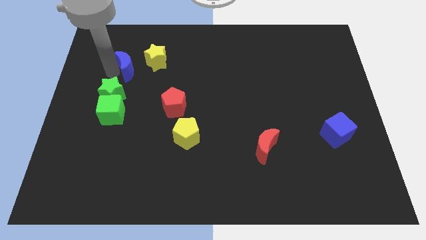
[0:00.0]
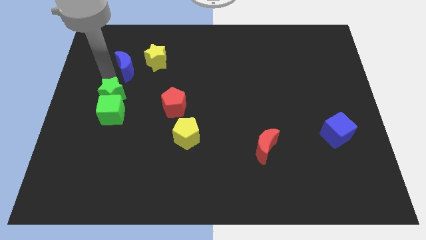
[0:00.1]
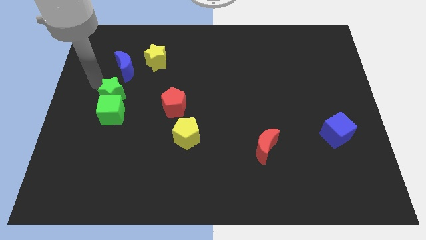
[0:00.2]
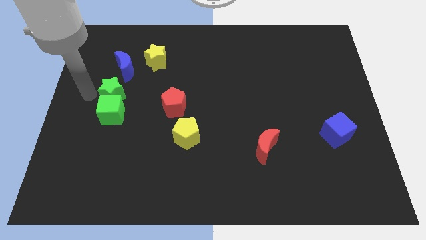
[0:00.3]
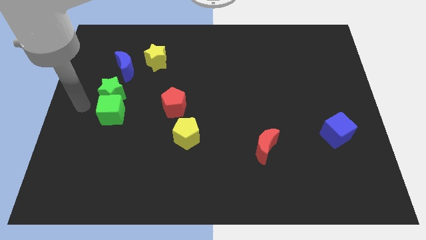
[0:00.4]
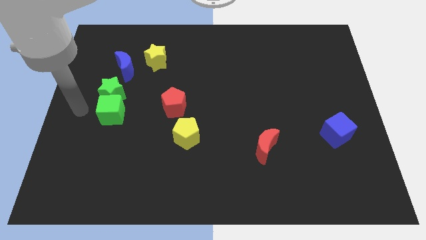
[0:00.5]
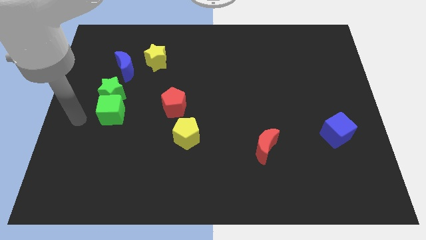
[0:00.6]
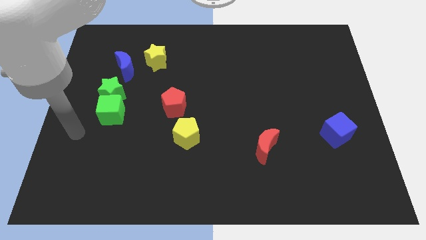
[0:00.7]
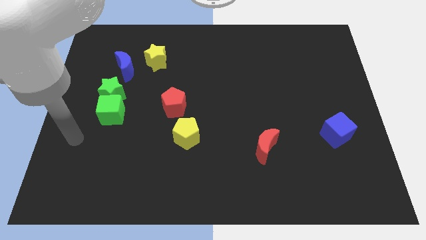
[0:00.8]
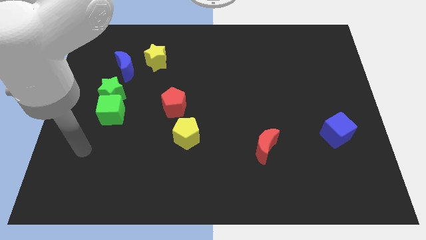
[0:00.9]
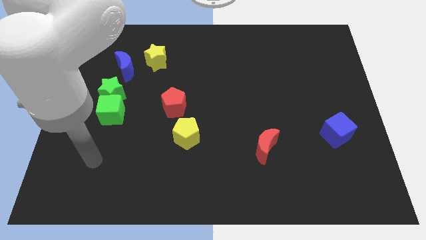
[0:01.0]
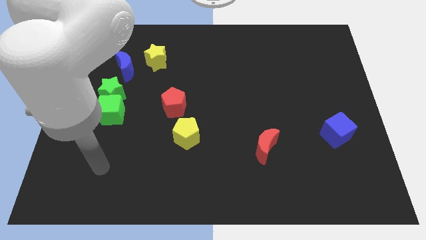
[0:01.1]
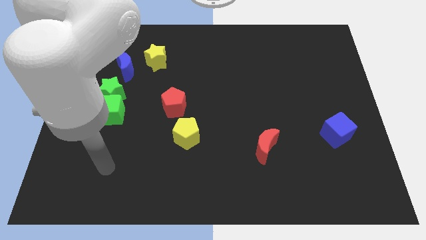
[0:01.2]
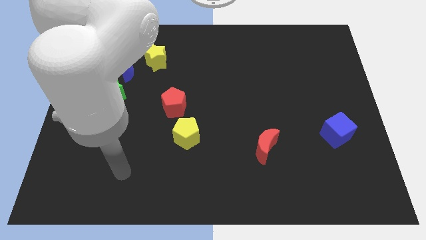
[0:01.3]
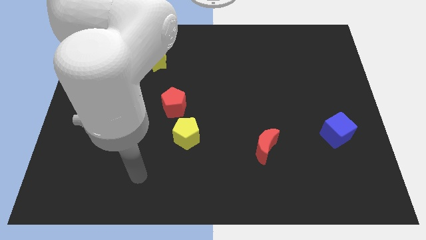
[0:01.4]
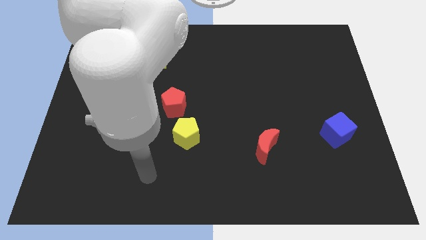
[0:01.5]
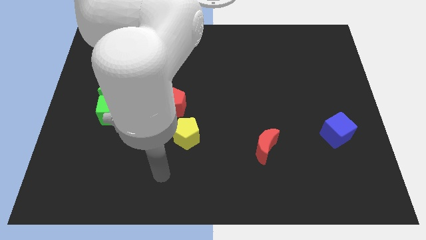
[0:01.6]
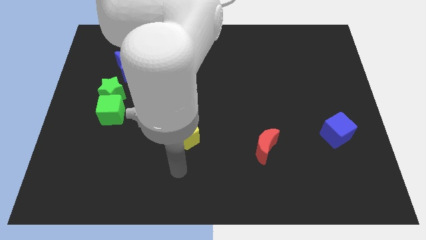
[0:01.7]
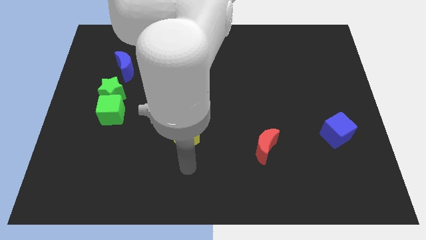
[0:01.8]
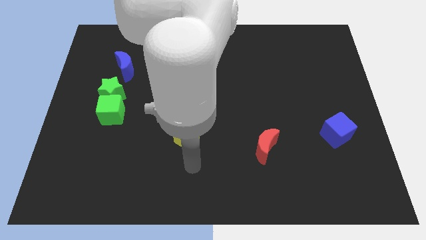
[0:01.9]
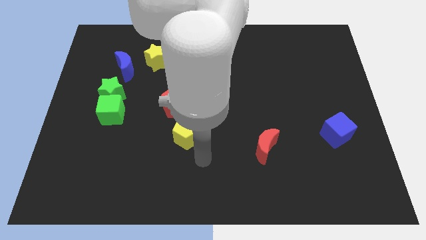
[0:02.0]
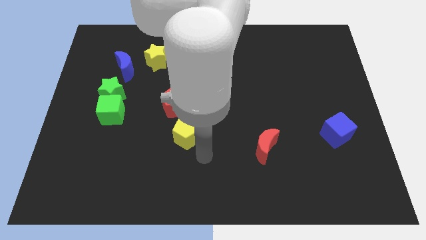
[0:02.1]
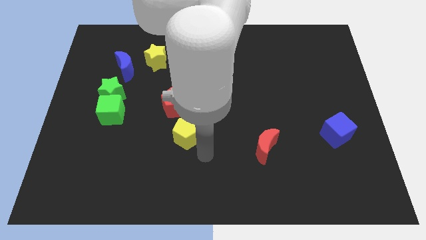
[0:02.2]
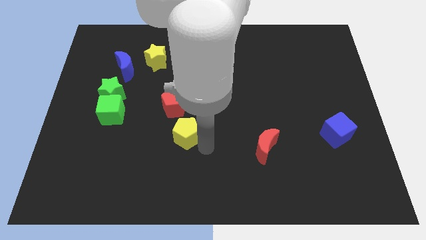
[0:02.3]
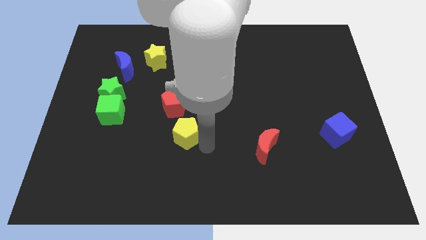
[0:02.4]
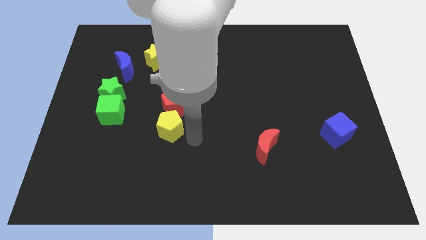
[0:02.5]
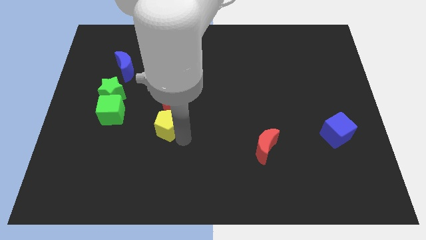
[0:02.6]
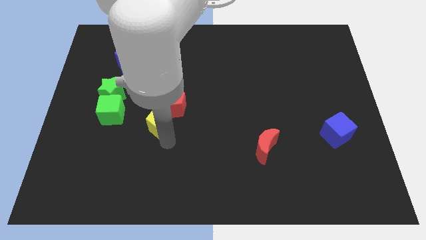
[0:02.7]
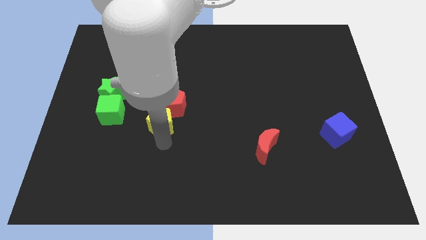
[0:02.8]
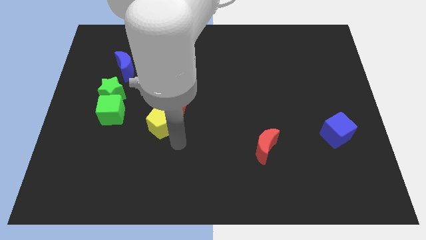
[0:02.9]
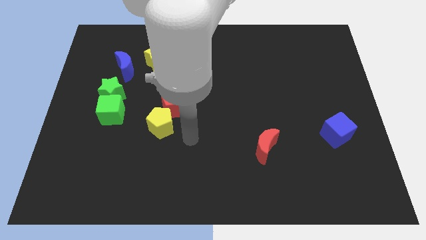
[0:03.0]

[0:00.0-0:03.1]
put the yellow pentagon at the bottom left side of the red pentagon

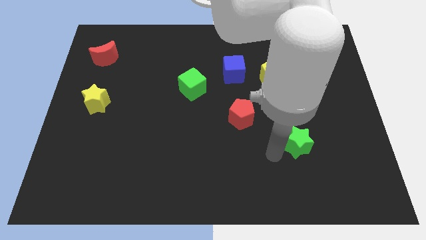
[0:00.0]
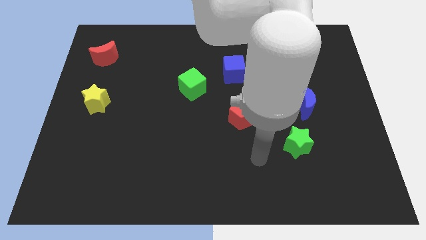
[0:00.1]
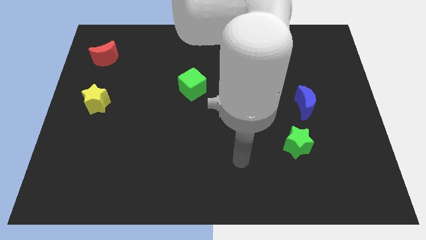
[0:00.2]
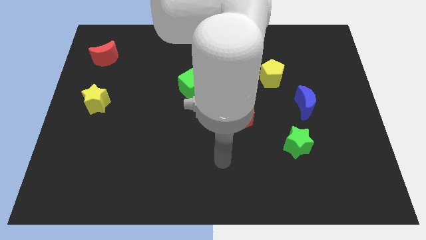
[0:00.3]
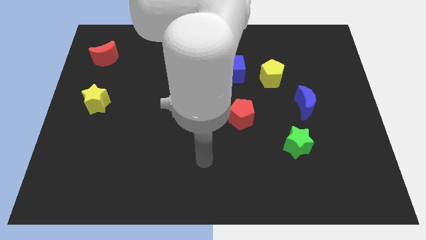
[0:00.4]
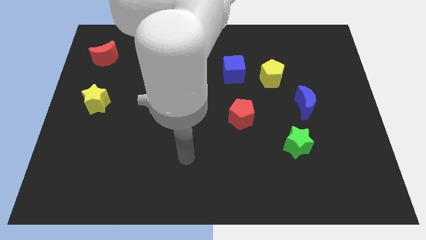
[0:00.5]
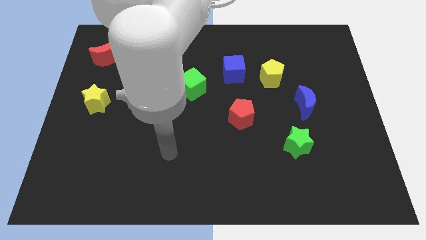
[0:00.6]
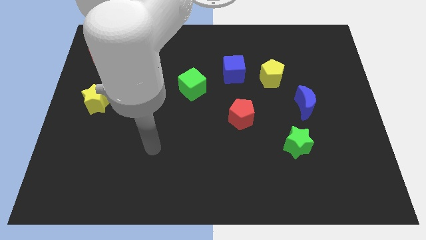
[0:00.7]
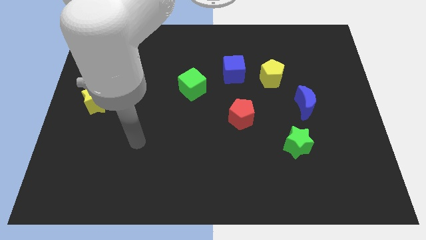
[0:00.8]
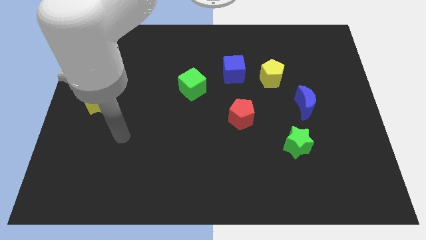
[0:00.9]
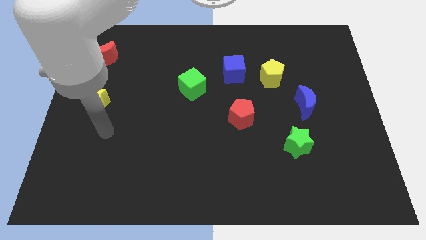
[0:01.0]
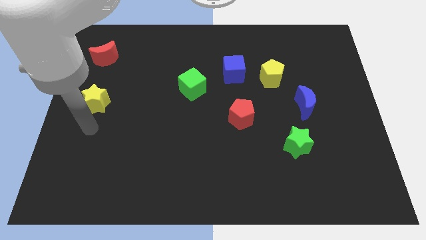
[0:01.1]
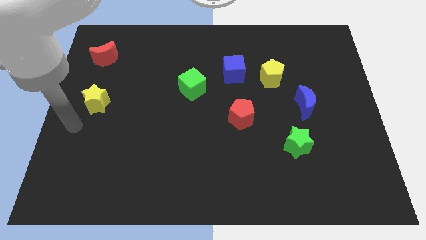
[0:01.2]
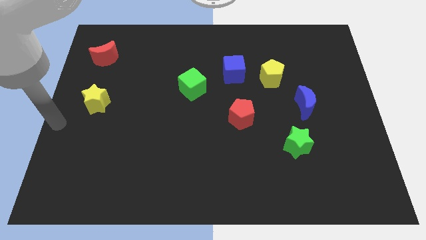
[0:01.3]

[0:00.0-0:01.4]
push your arm towards the left side of the board

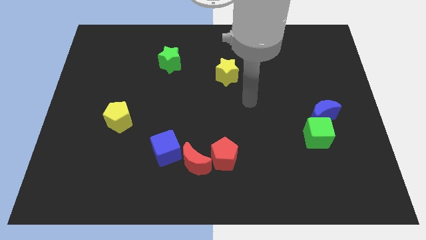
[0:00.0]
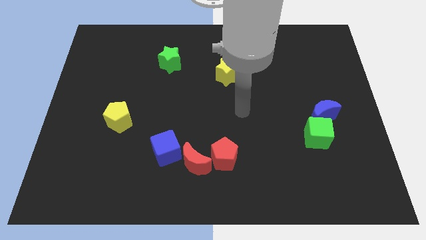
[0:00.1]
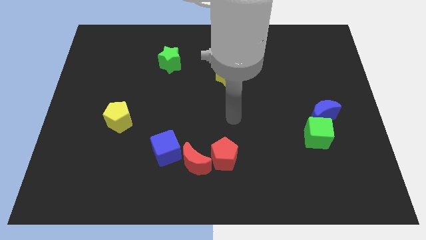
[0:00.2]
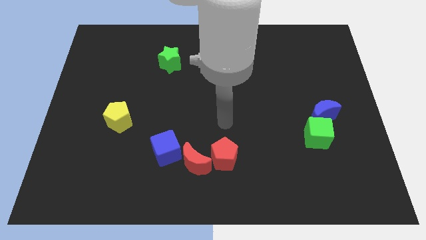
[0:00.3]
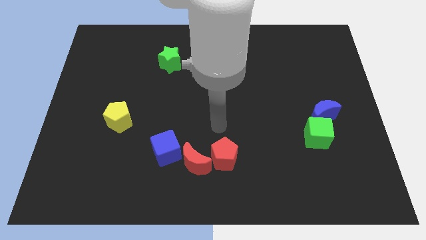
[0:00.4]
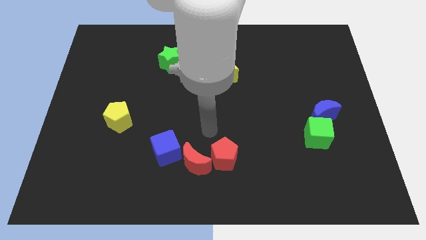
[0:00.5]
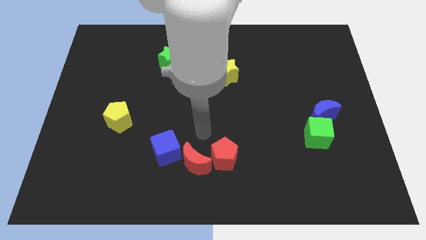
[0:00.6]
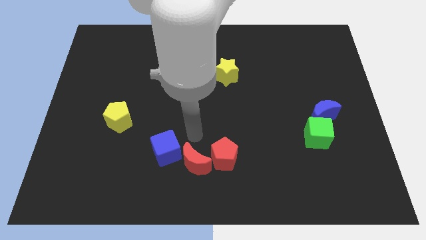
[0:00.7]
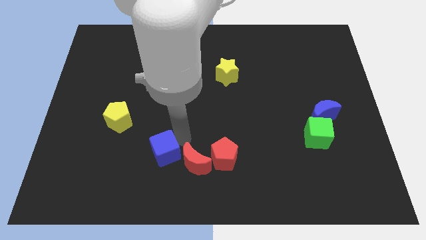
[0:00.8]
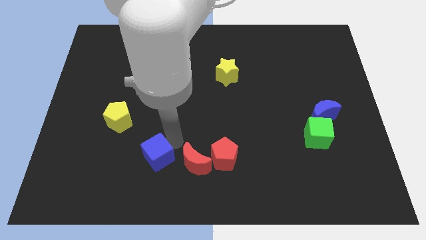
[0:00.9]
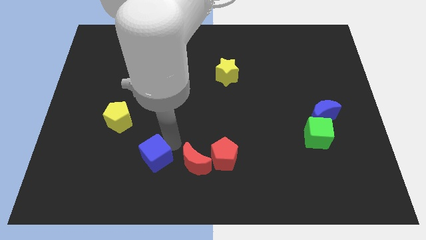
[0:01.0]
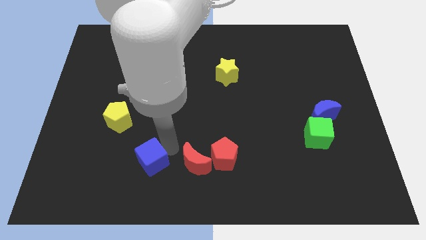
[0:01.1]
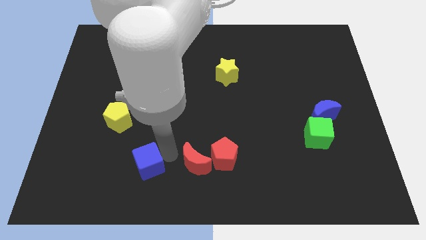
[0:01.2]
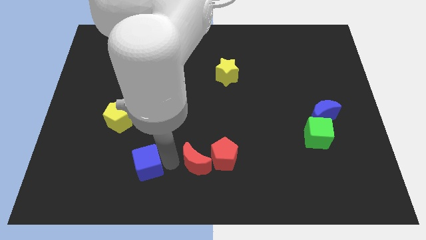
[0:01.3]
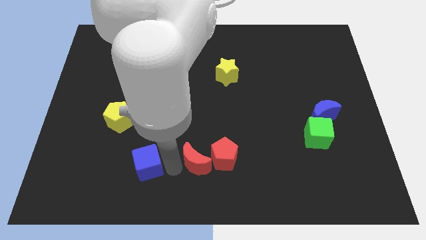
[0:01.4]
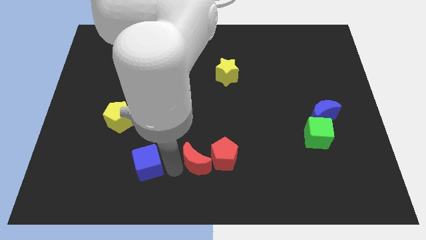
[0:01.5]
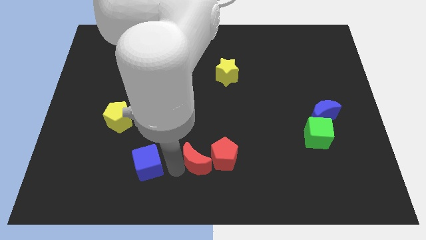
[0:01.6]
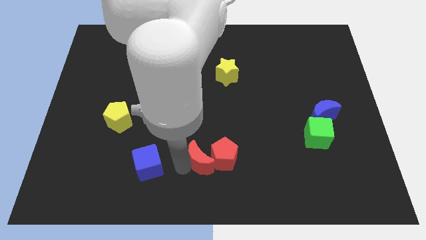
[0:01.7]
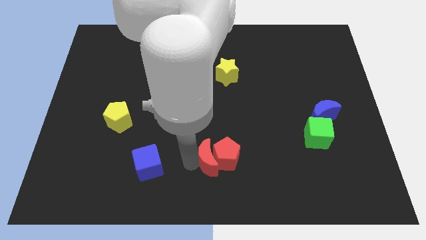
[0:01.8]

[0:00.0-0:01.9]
separate the blue cube to the left

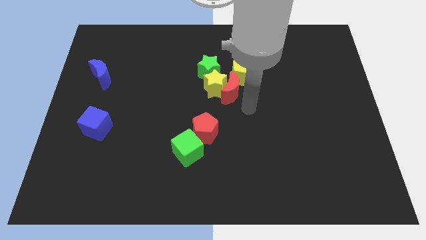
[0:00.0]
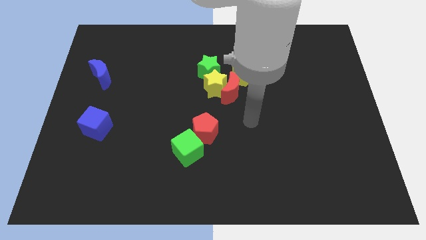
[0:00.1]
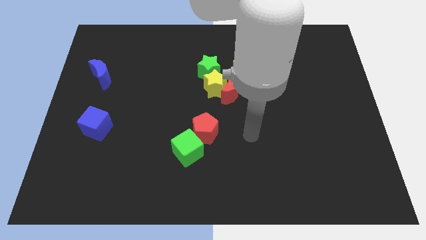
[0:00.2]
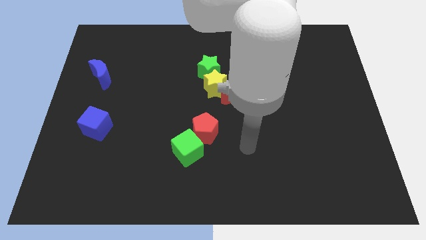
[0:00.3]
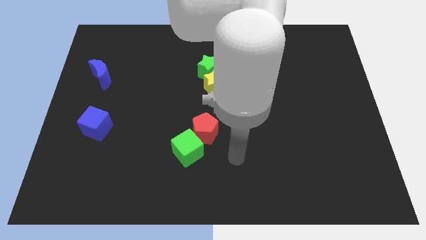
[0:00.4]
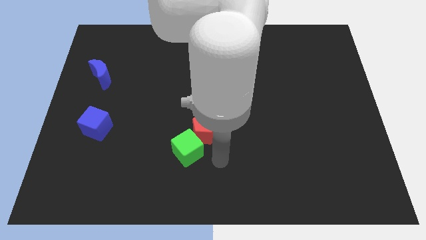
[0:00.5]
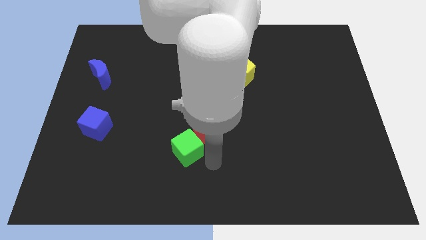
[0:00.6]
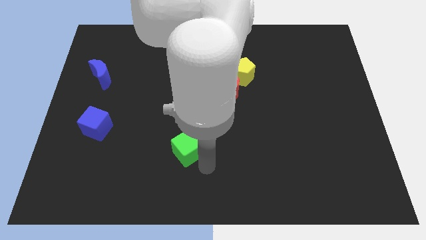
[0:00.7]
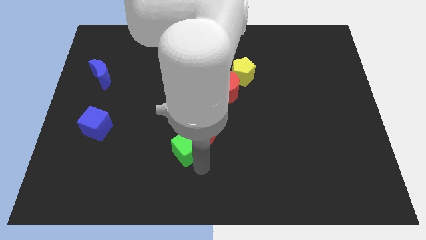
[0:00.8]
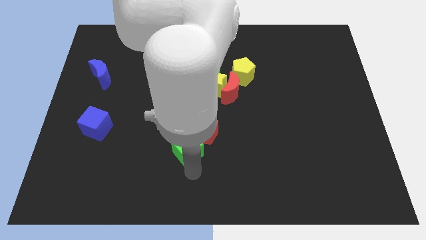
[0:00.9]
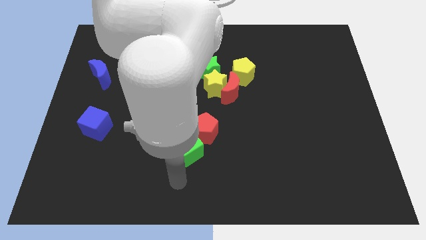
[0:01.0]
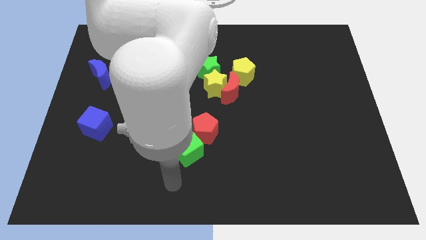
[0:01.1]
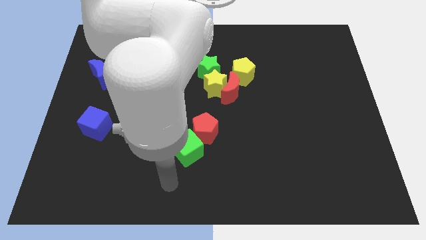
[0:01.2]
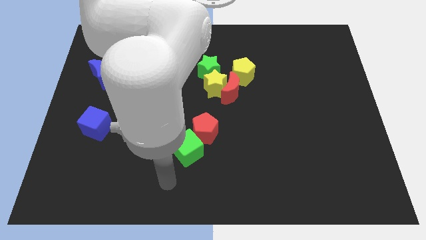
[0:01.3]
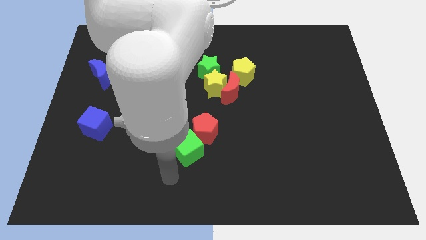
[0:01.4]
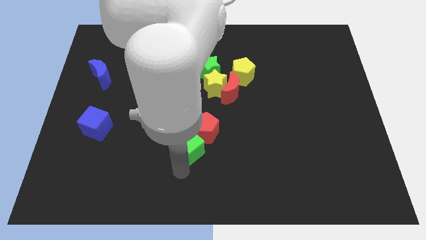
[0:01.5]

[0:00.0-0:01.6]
point your arm at the bottom left side of green cube

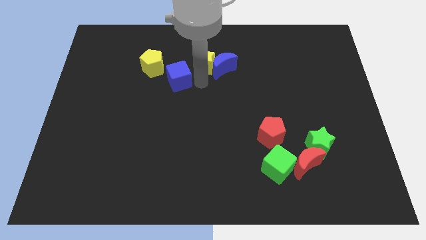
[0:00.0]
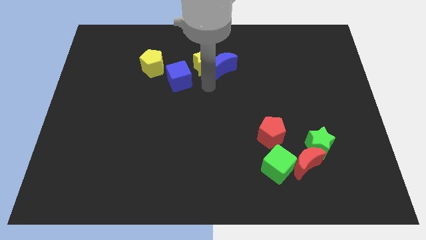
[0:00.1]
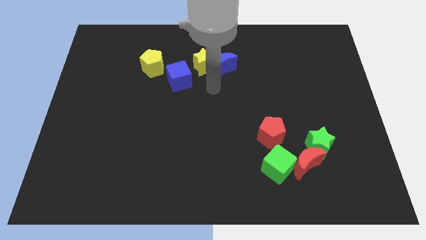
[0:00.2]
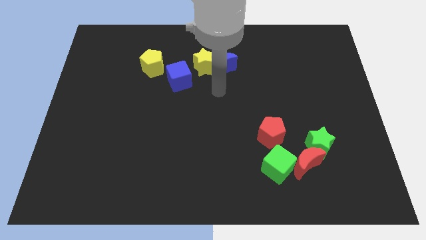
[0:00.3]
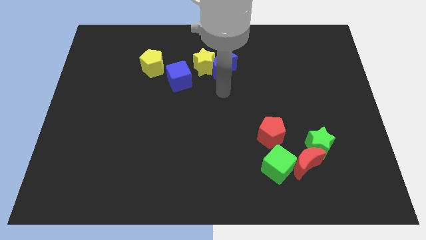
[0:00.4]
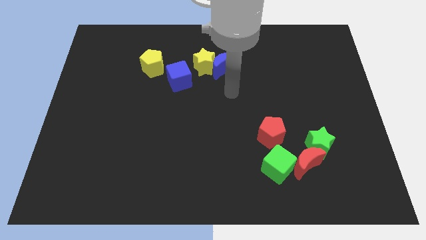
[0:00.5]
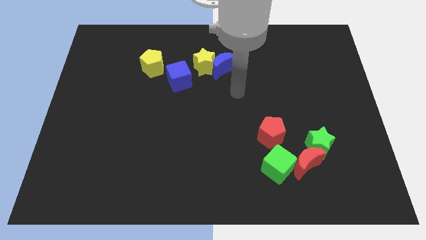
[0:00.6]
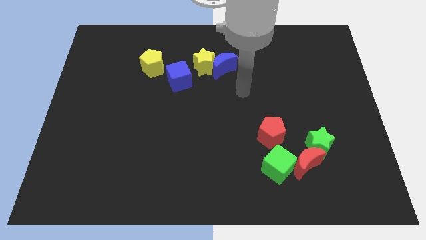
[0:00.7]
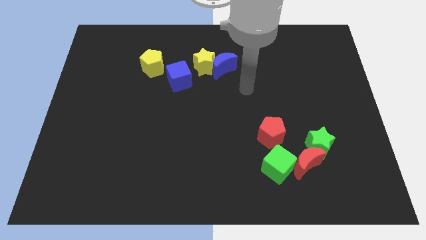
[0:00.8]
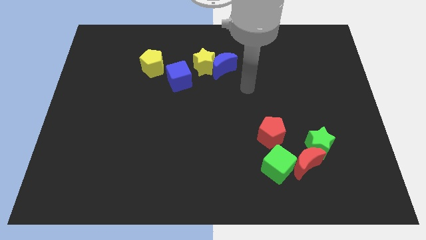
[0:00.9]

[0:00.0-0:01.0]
move your arm away from the blue cube
